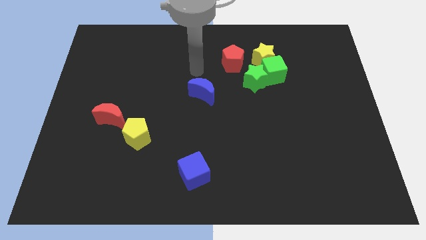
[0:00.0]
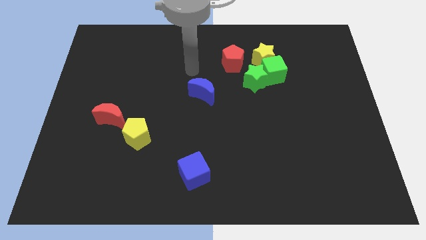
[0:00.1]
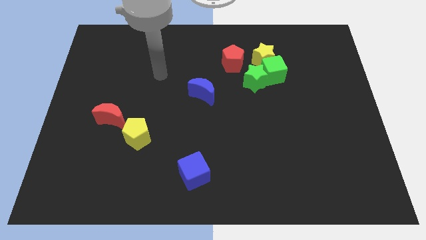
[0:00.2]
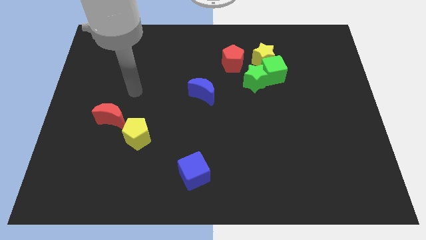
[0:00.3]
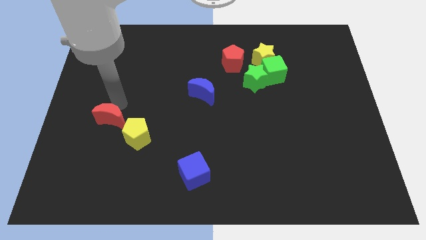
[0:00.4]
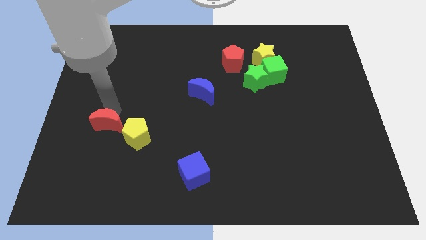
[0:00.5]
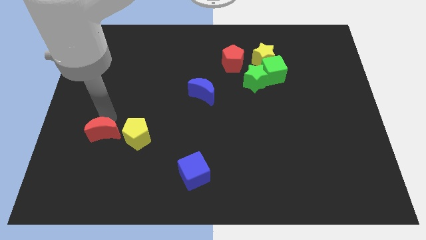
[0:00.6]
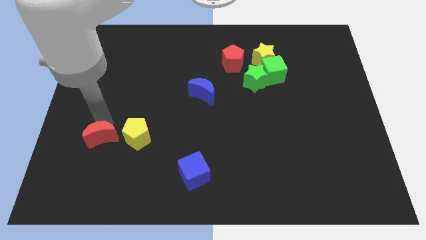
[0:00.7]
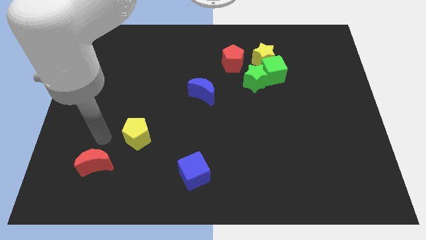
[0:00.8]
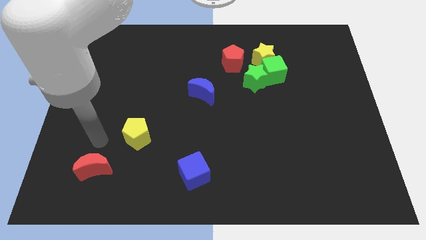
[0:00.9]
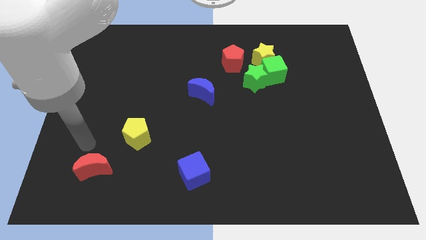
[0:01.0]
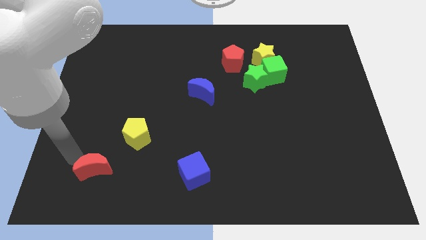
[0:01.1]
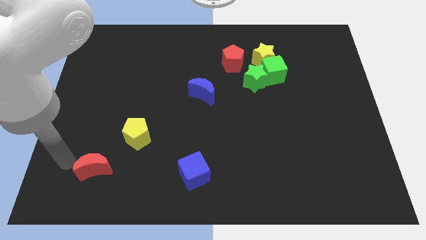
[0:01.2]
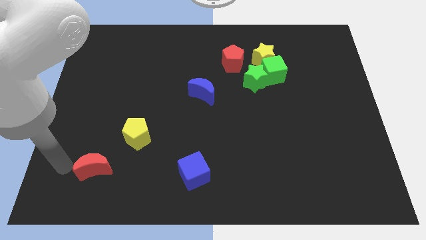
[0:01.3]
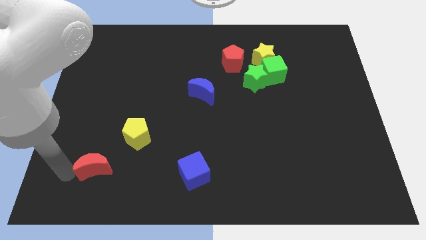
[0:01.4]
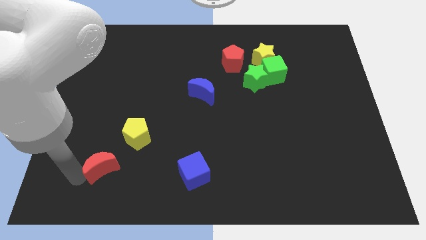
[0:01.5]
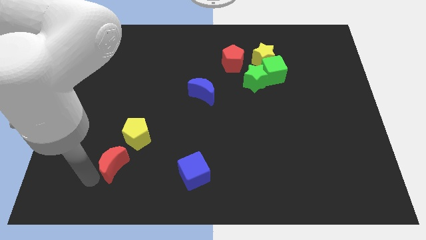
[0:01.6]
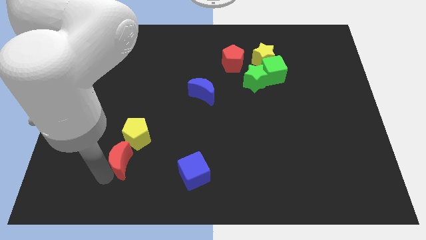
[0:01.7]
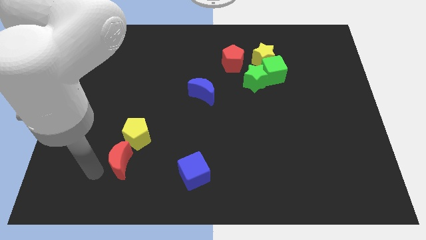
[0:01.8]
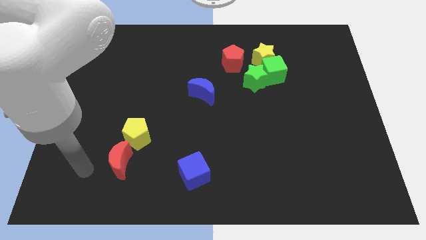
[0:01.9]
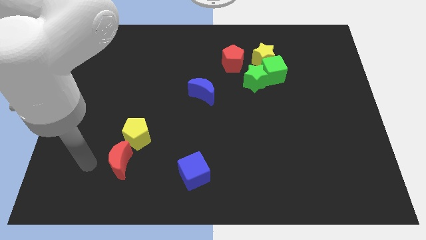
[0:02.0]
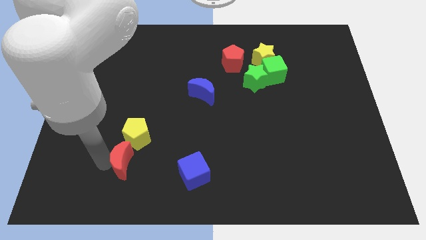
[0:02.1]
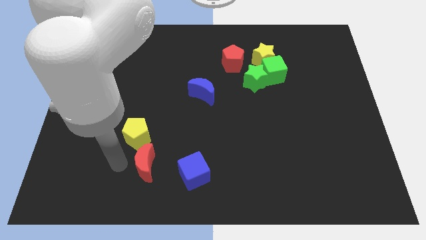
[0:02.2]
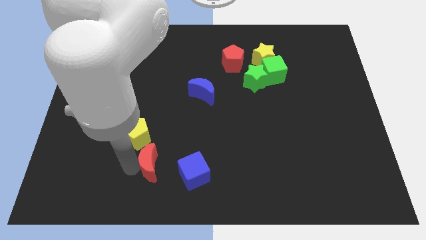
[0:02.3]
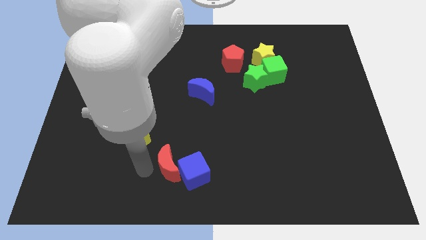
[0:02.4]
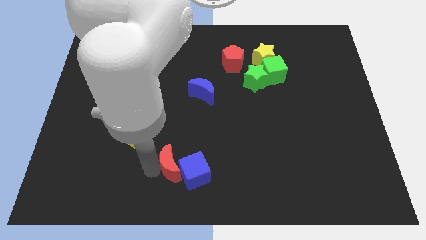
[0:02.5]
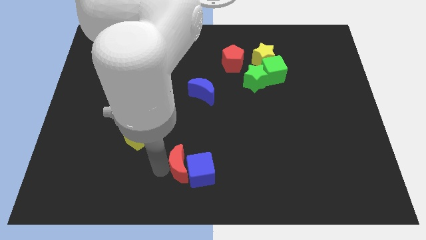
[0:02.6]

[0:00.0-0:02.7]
slide the red moon close to the blue cube

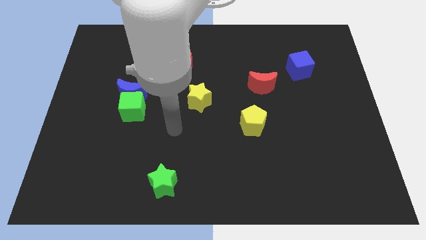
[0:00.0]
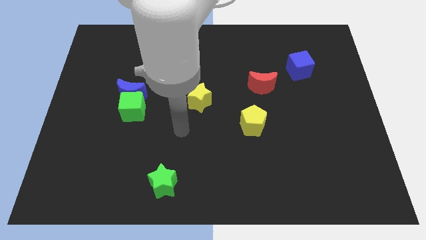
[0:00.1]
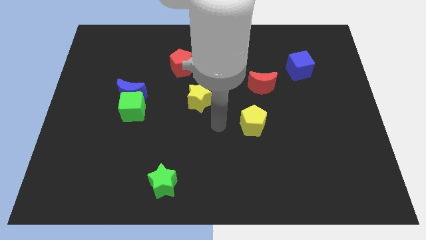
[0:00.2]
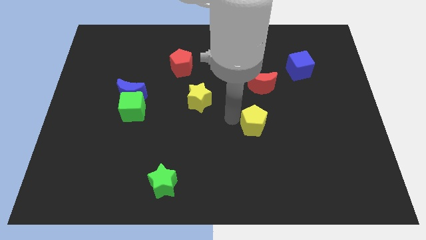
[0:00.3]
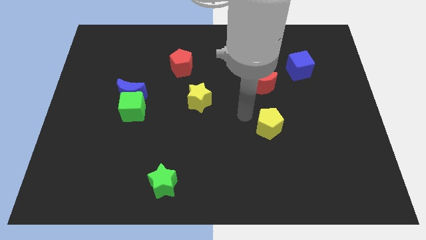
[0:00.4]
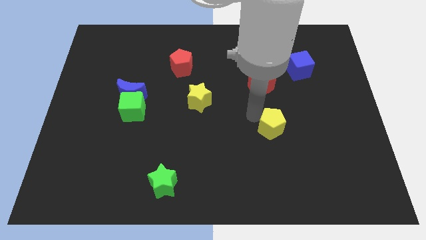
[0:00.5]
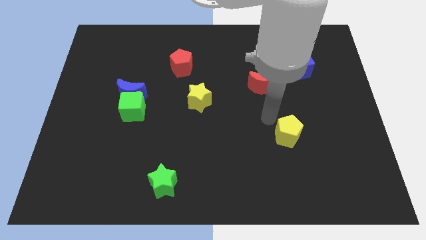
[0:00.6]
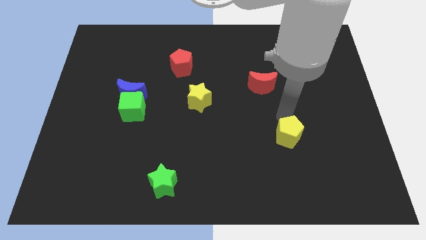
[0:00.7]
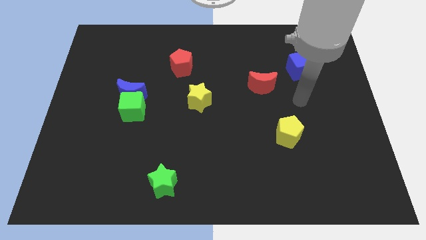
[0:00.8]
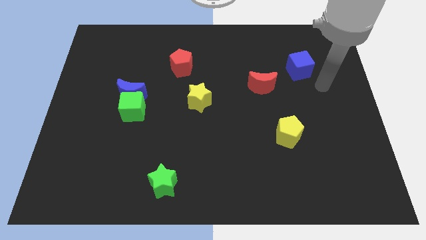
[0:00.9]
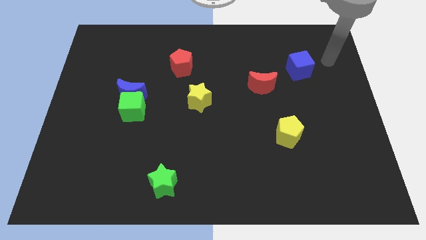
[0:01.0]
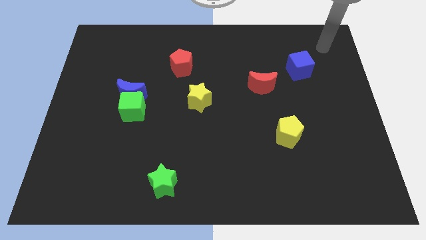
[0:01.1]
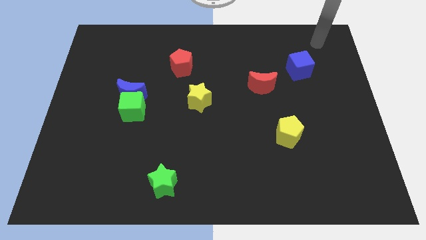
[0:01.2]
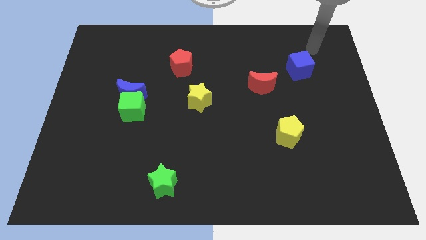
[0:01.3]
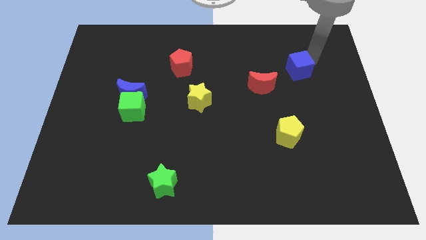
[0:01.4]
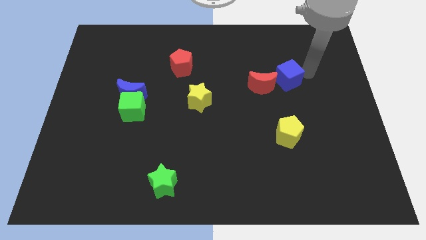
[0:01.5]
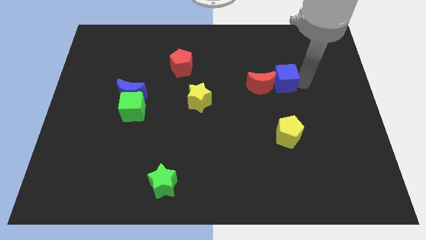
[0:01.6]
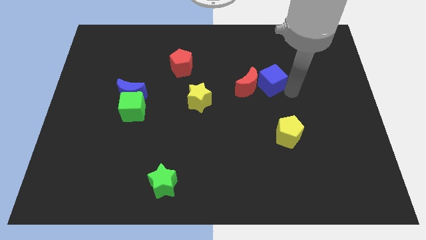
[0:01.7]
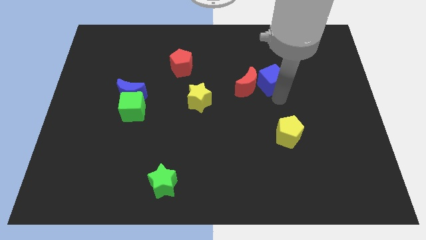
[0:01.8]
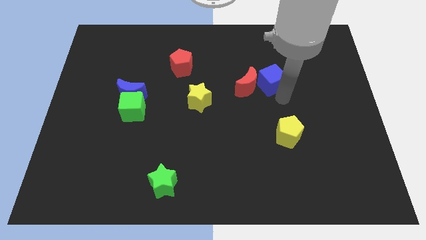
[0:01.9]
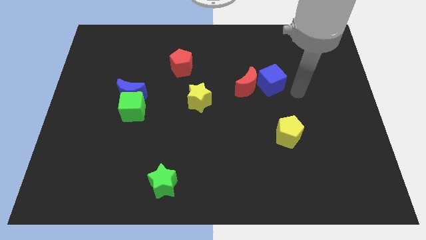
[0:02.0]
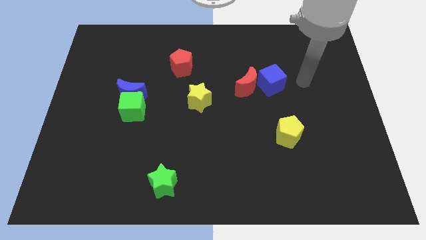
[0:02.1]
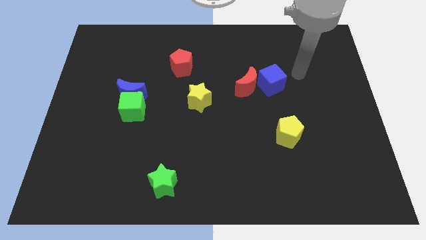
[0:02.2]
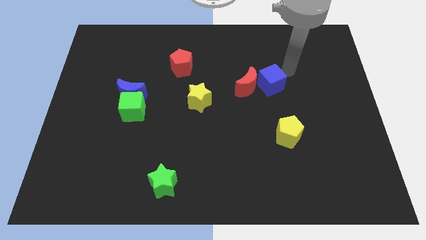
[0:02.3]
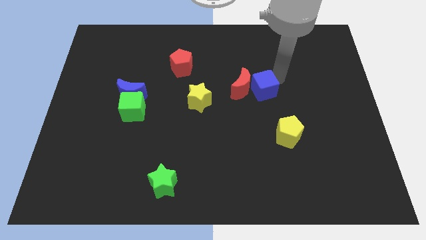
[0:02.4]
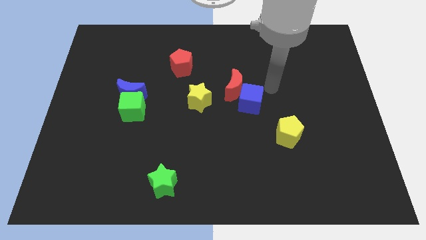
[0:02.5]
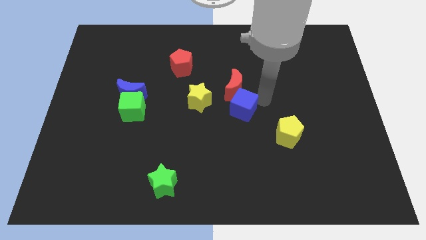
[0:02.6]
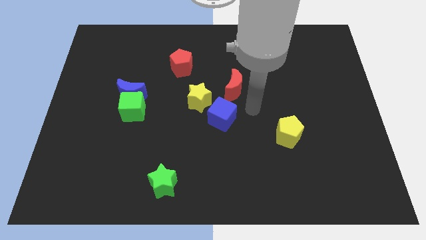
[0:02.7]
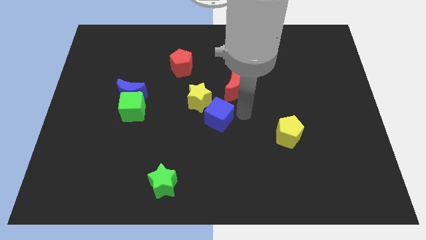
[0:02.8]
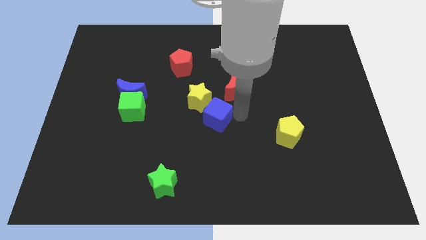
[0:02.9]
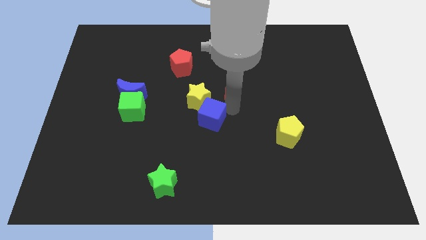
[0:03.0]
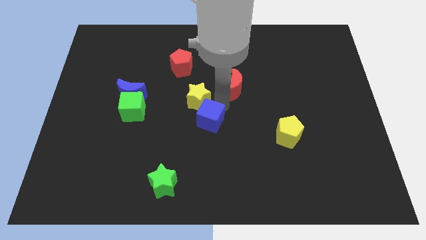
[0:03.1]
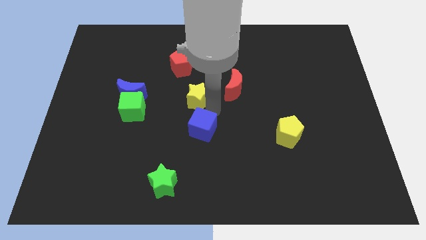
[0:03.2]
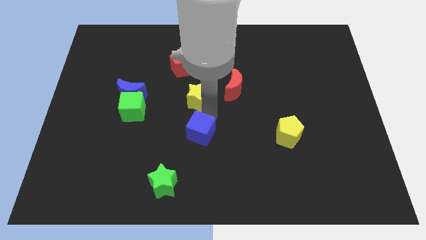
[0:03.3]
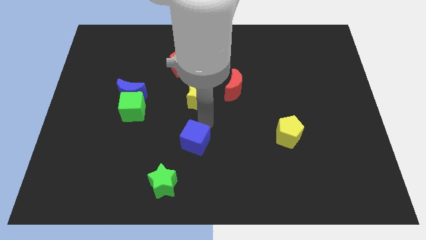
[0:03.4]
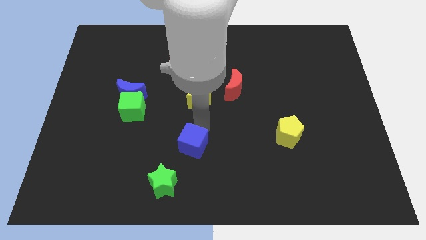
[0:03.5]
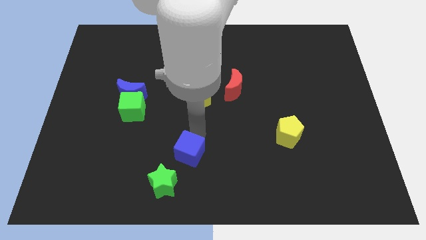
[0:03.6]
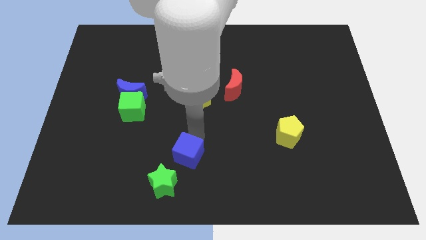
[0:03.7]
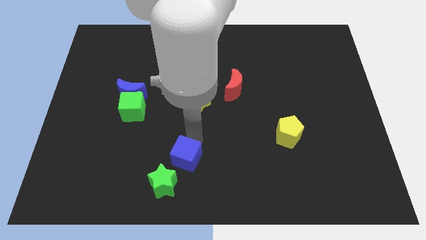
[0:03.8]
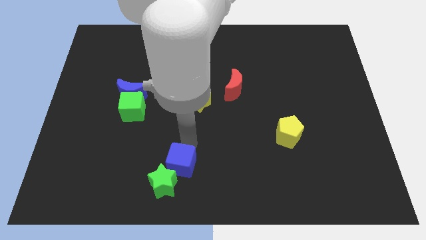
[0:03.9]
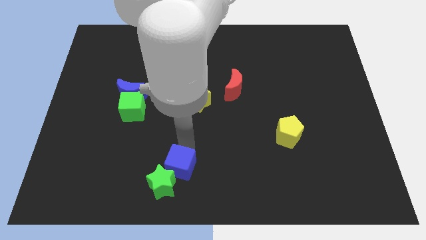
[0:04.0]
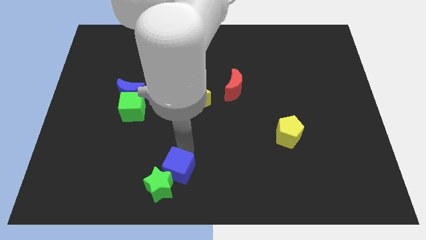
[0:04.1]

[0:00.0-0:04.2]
put the blue cube towards the green star

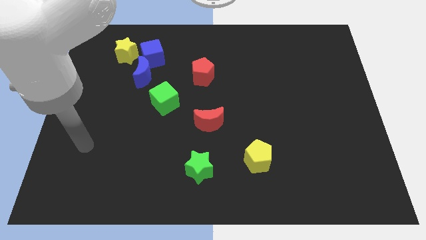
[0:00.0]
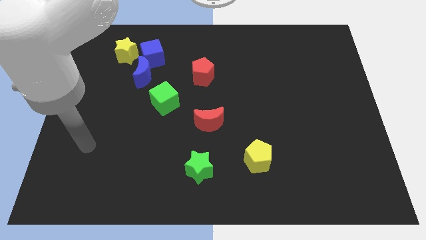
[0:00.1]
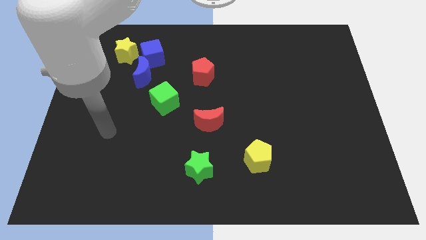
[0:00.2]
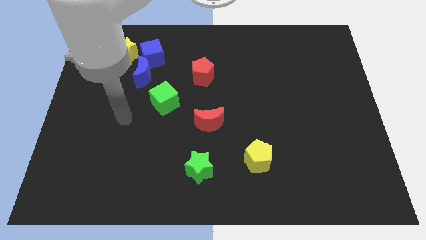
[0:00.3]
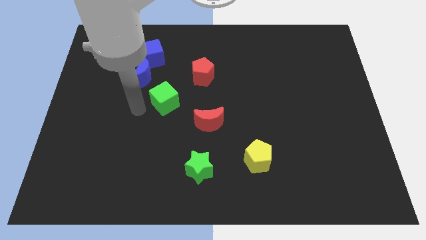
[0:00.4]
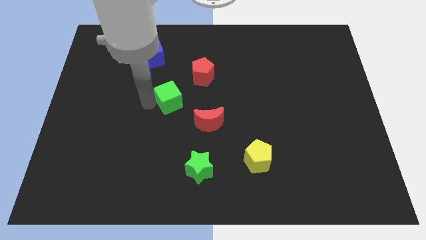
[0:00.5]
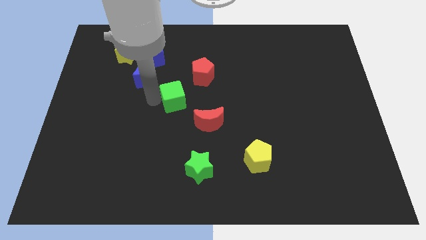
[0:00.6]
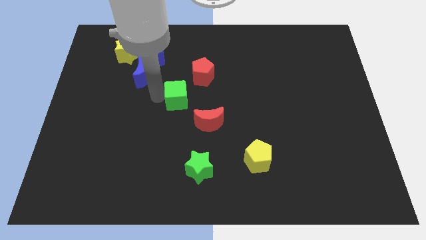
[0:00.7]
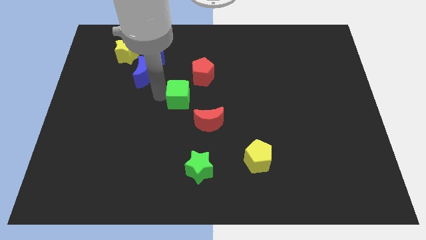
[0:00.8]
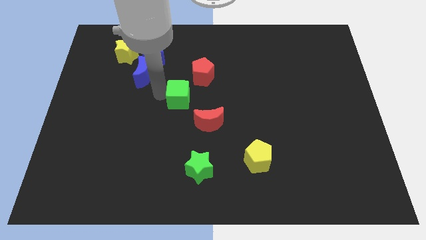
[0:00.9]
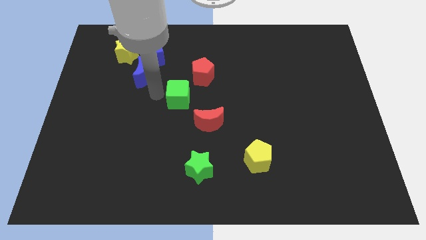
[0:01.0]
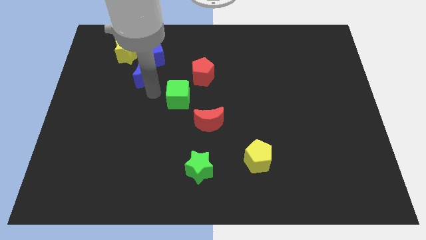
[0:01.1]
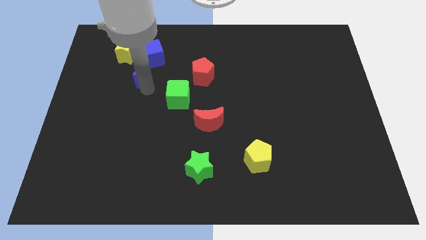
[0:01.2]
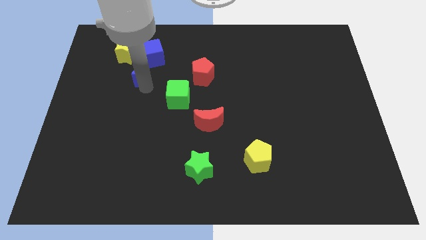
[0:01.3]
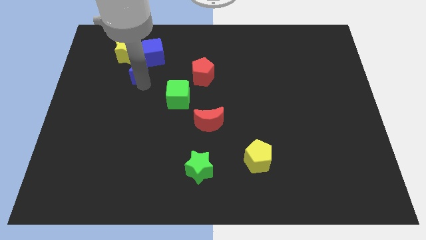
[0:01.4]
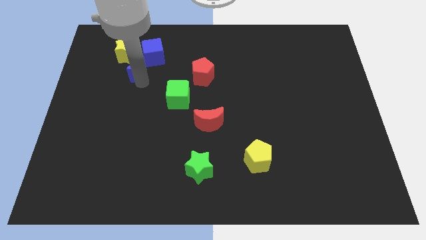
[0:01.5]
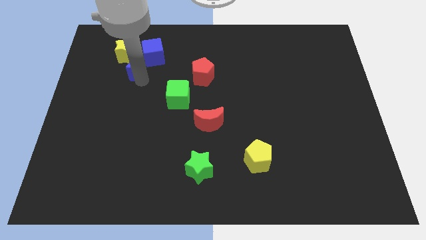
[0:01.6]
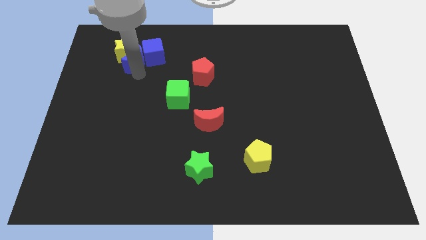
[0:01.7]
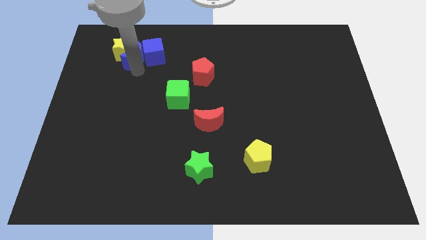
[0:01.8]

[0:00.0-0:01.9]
move the blue moon to the yellow star

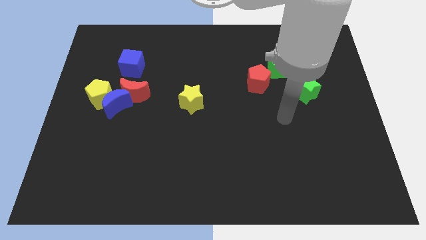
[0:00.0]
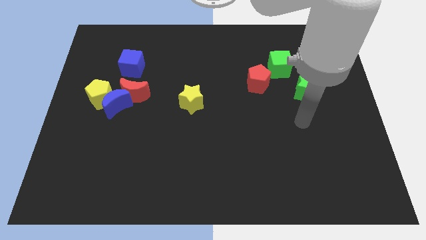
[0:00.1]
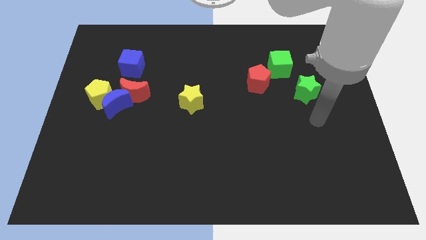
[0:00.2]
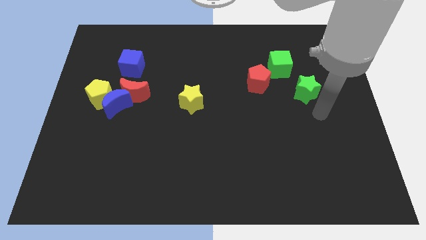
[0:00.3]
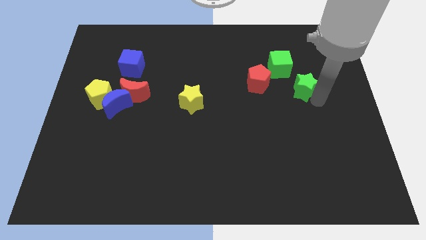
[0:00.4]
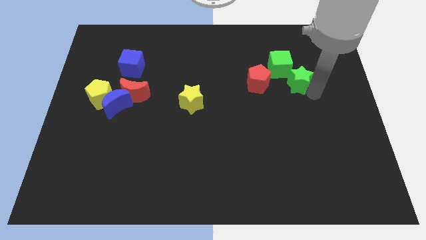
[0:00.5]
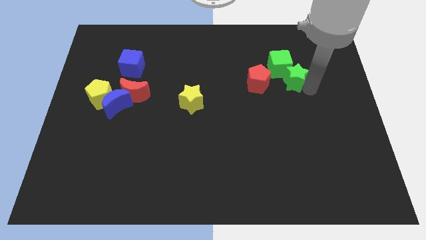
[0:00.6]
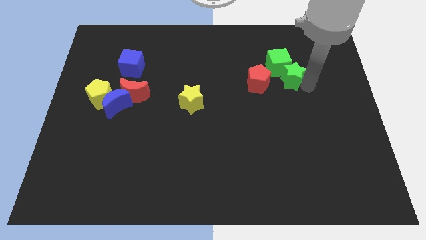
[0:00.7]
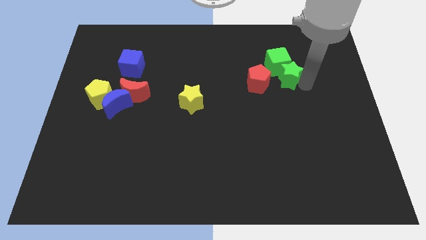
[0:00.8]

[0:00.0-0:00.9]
move the green star close to the green cube
